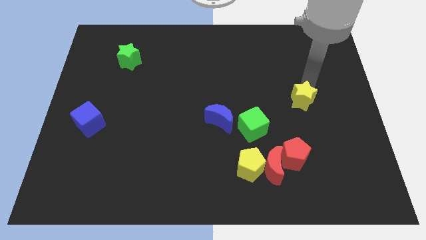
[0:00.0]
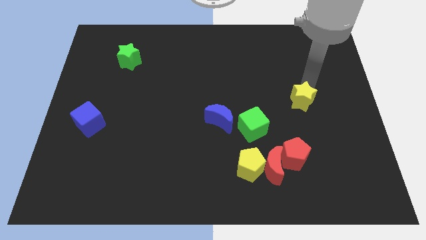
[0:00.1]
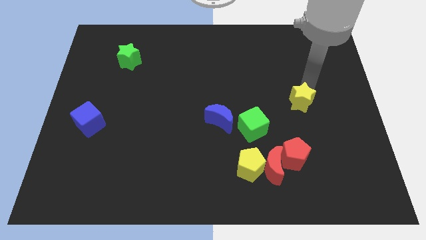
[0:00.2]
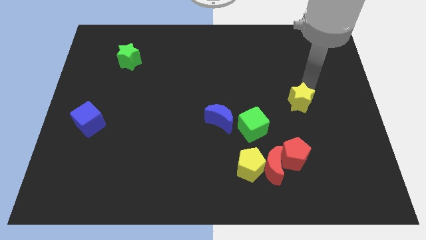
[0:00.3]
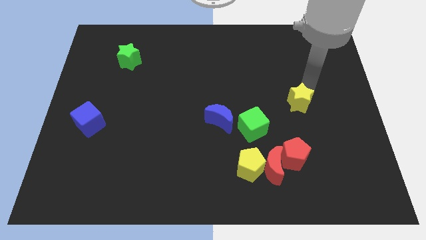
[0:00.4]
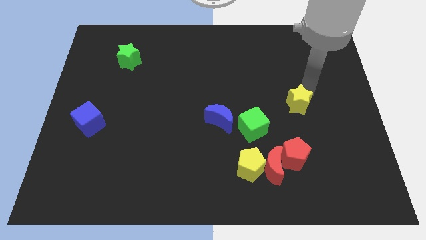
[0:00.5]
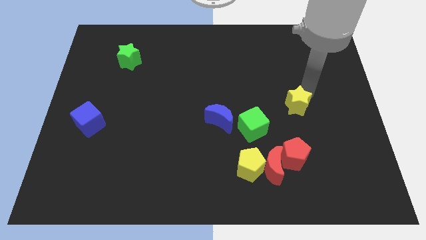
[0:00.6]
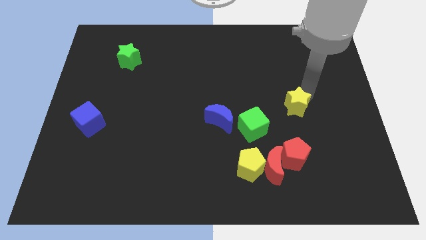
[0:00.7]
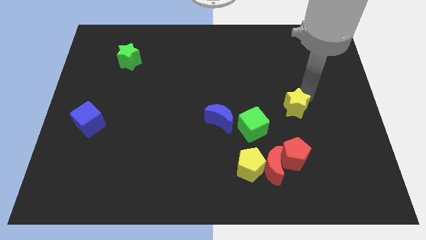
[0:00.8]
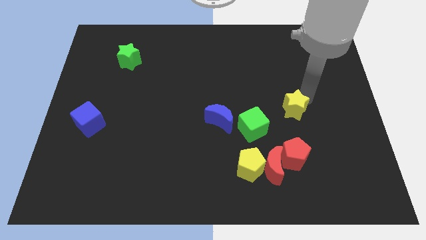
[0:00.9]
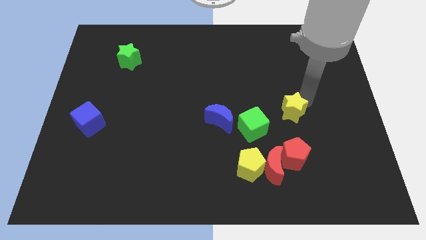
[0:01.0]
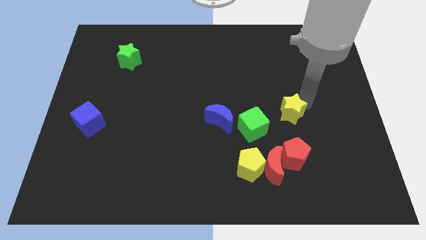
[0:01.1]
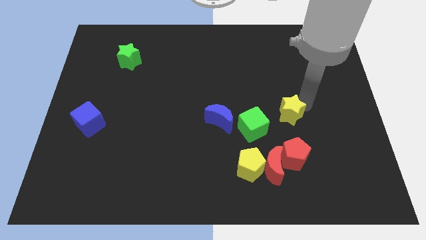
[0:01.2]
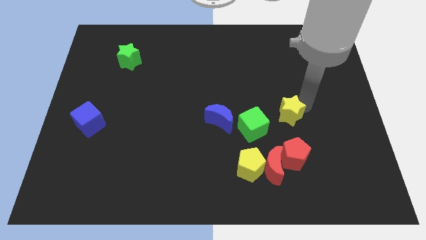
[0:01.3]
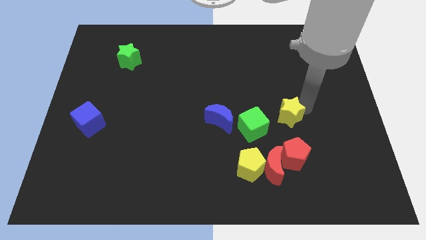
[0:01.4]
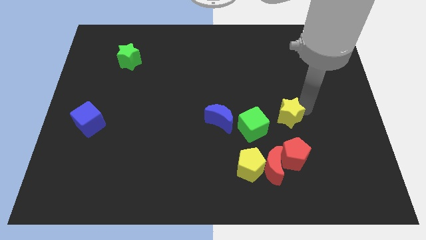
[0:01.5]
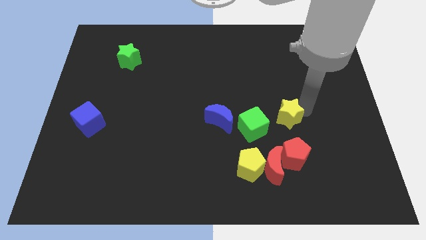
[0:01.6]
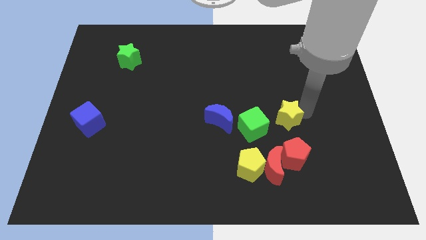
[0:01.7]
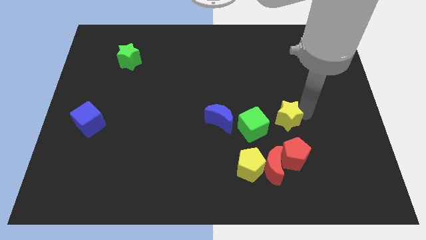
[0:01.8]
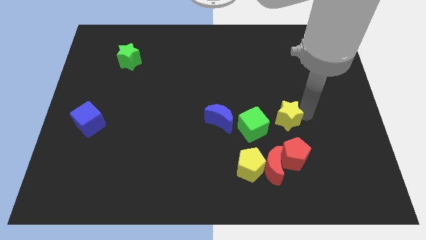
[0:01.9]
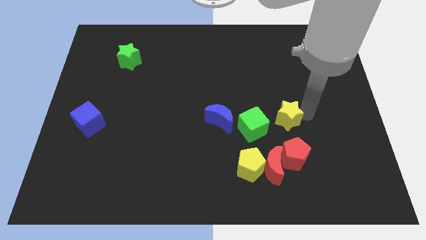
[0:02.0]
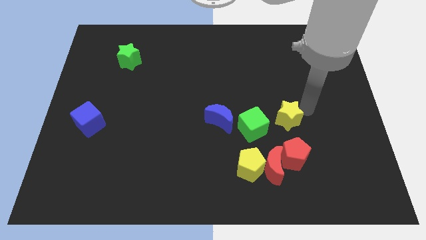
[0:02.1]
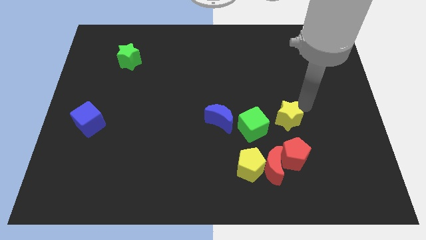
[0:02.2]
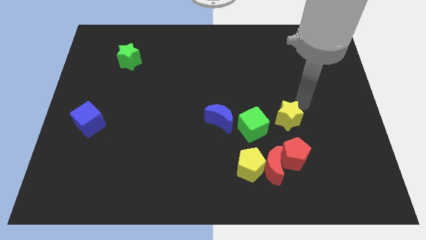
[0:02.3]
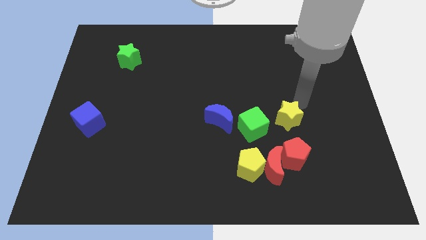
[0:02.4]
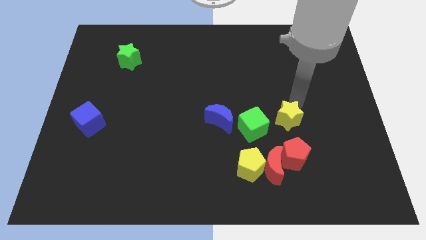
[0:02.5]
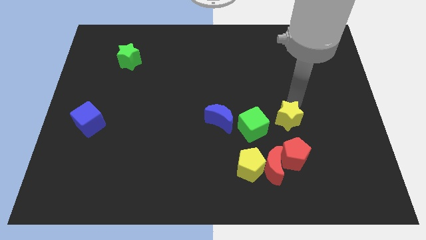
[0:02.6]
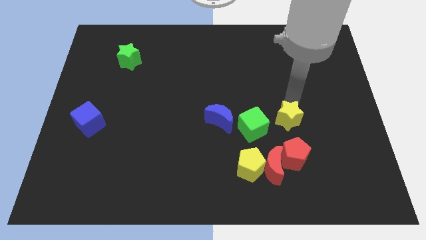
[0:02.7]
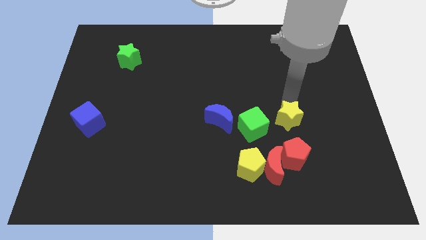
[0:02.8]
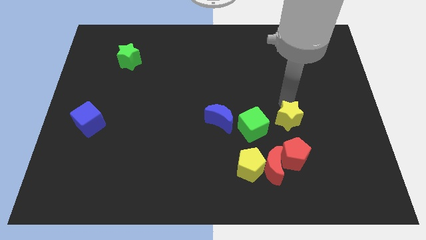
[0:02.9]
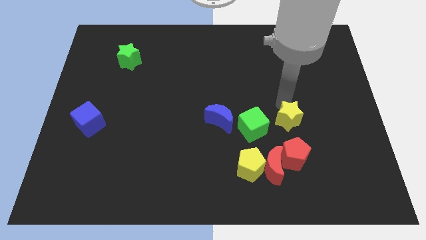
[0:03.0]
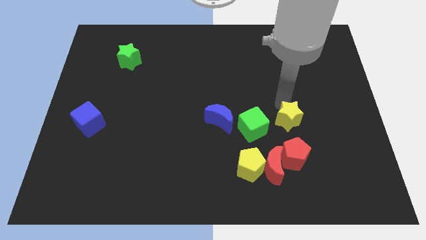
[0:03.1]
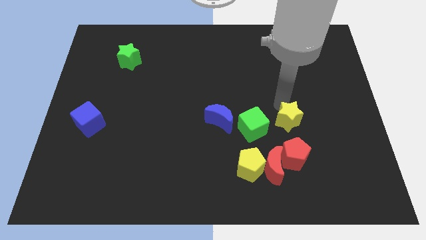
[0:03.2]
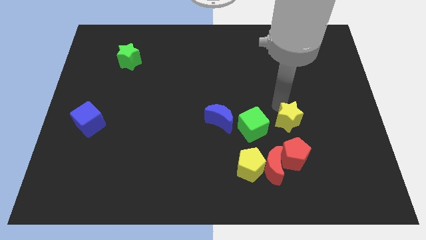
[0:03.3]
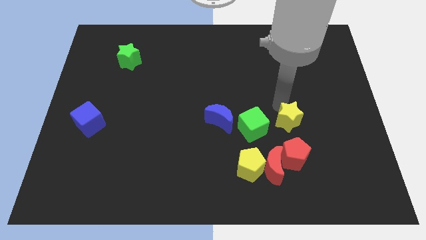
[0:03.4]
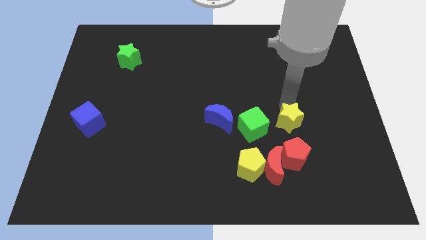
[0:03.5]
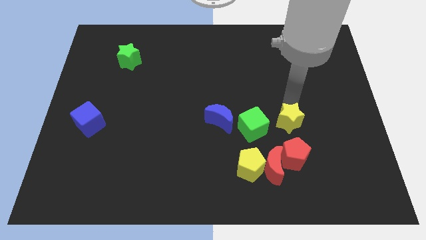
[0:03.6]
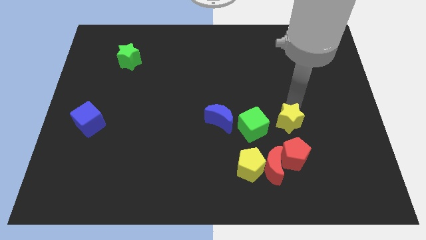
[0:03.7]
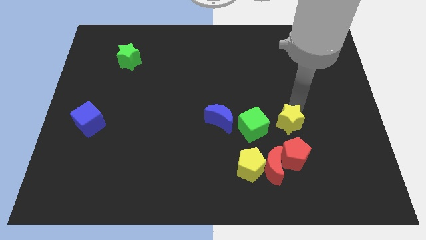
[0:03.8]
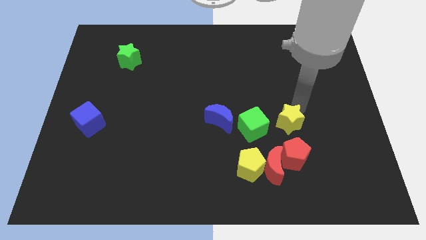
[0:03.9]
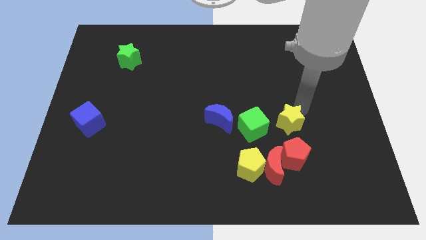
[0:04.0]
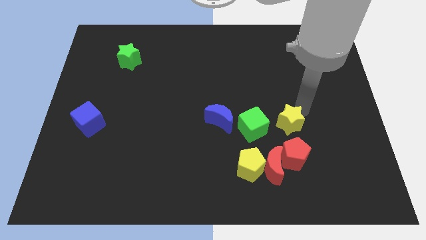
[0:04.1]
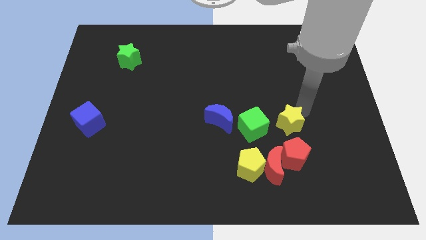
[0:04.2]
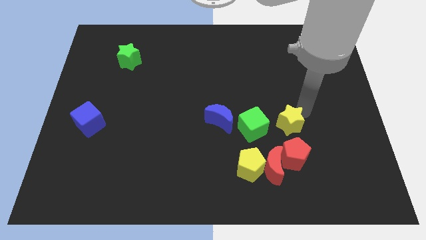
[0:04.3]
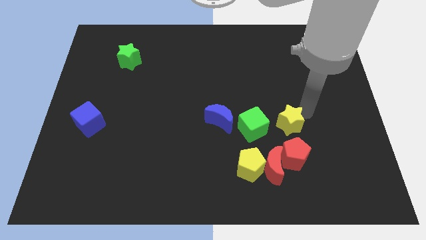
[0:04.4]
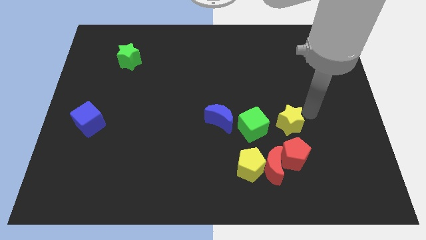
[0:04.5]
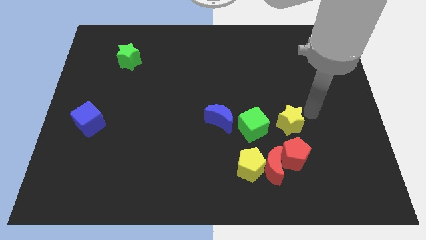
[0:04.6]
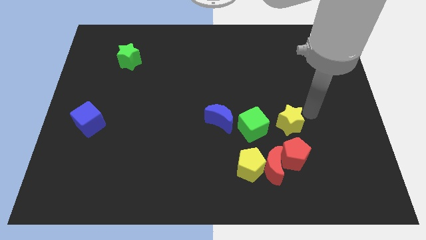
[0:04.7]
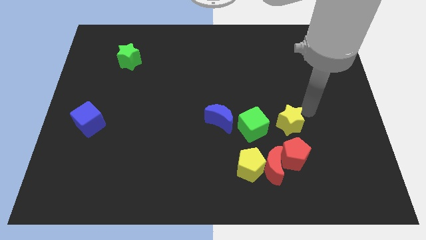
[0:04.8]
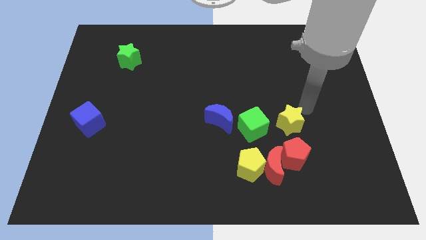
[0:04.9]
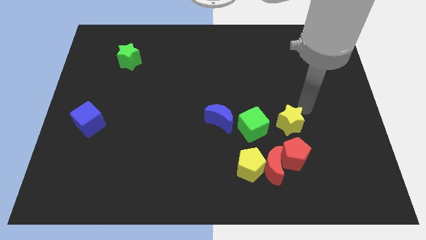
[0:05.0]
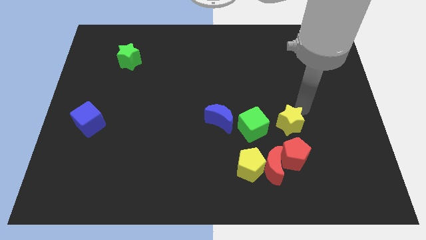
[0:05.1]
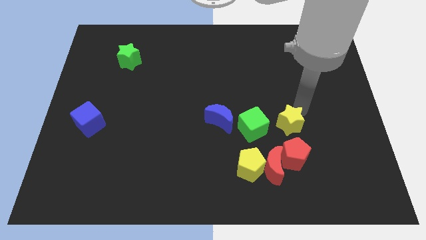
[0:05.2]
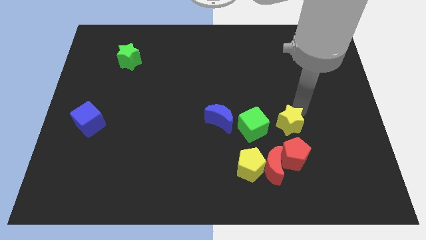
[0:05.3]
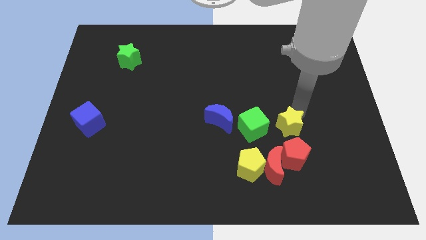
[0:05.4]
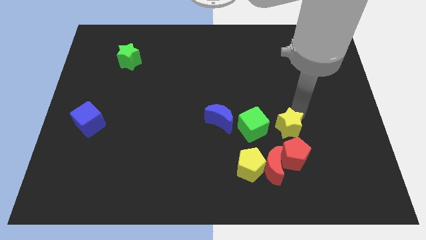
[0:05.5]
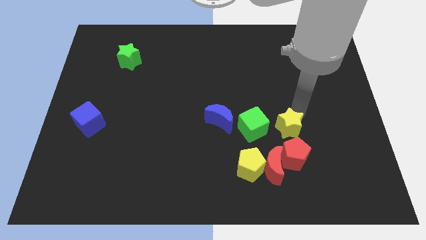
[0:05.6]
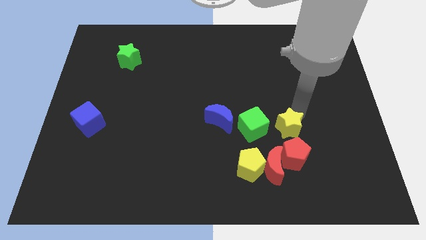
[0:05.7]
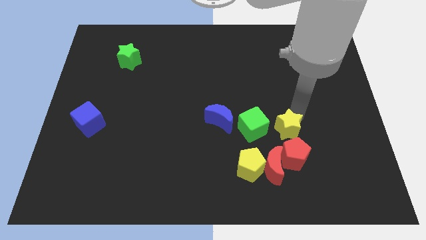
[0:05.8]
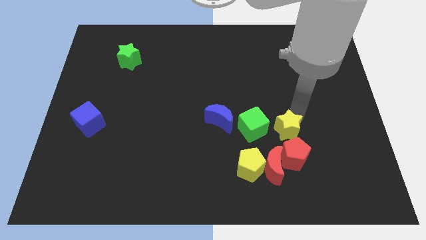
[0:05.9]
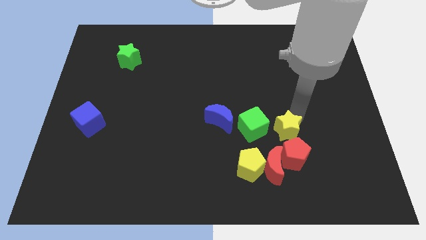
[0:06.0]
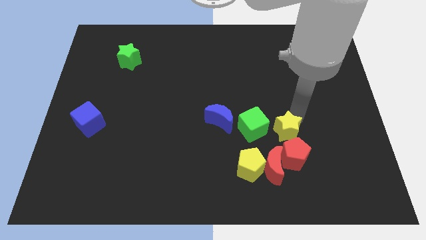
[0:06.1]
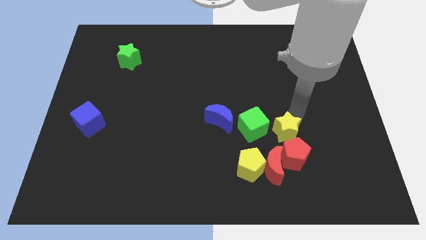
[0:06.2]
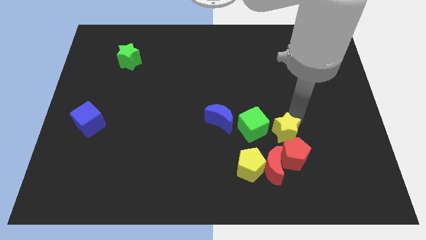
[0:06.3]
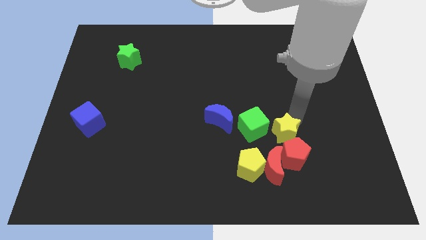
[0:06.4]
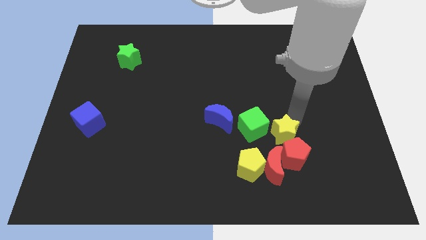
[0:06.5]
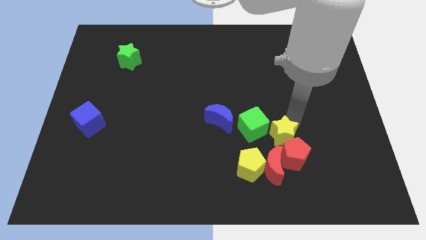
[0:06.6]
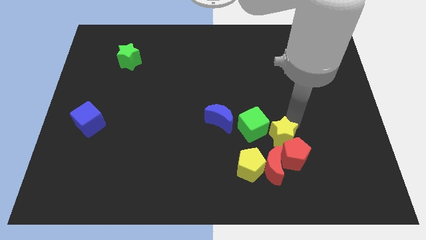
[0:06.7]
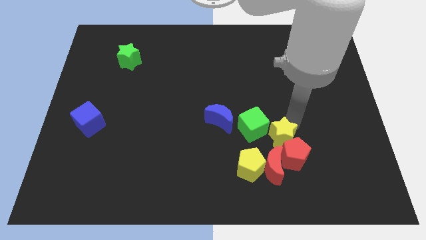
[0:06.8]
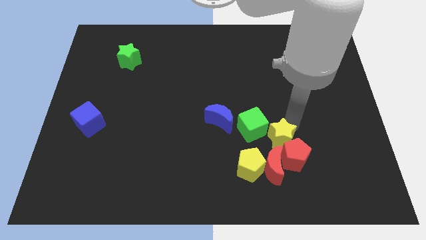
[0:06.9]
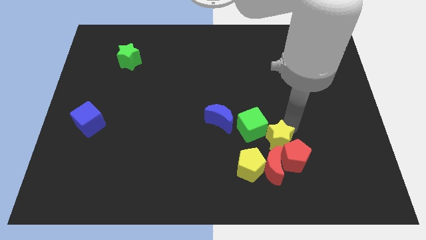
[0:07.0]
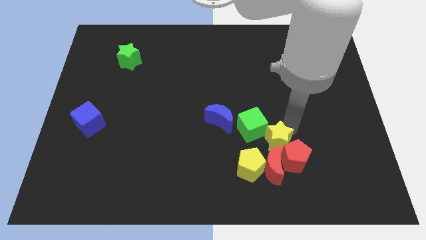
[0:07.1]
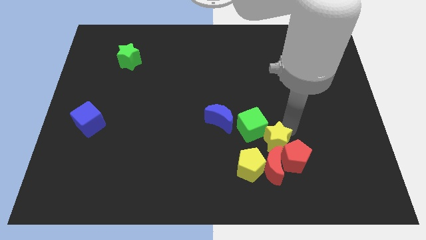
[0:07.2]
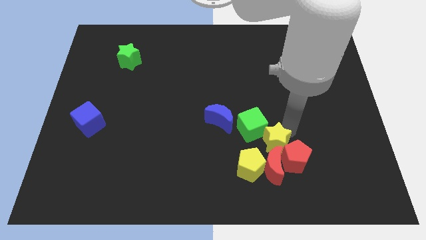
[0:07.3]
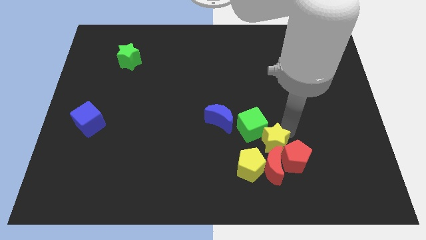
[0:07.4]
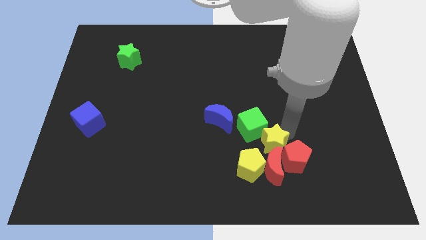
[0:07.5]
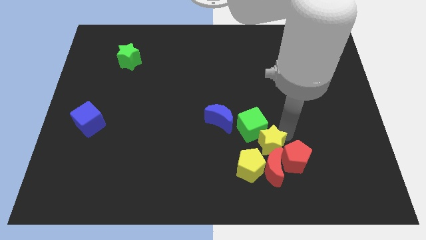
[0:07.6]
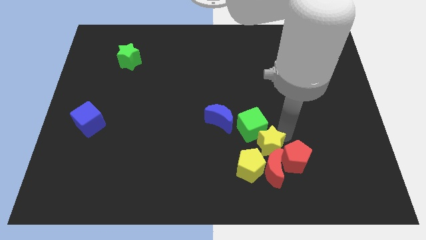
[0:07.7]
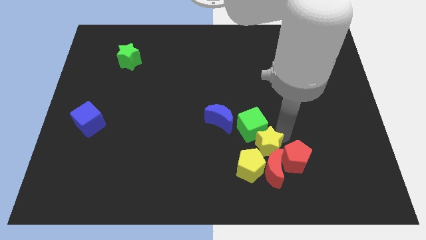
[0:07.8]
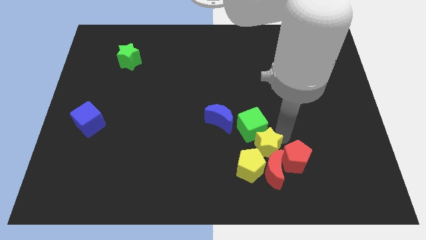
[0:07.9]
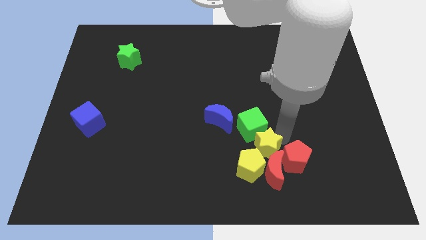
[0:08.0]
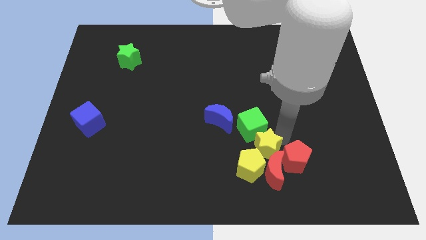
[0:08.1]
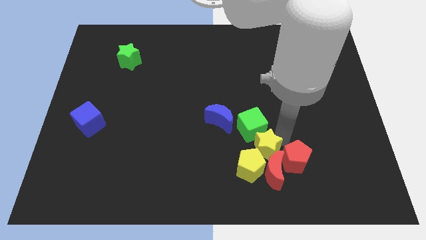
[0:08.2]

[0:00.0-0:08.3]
place the yellow star above the yellow pentagon and the red moon to form a triangle

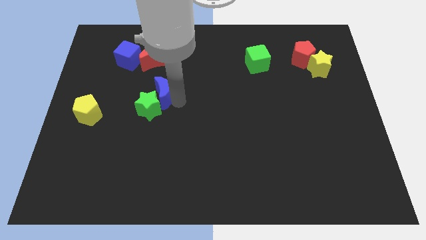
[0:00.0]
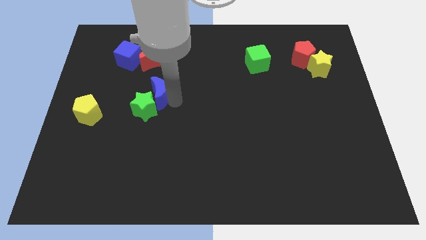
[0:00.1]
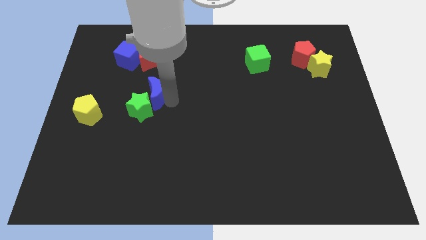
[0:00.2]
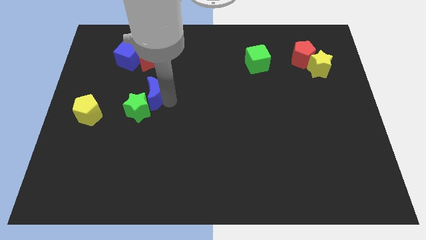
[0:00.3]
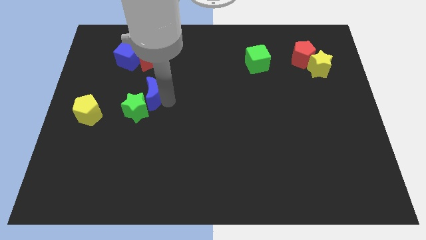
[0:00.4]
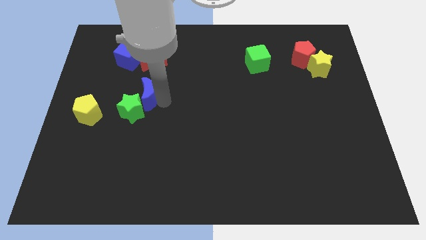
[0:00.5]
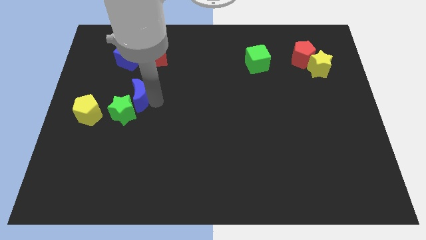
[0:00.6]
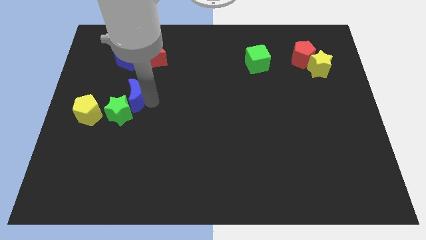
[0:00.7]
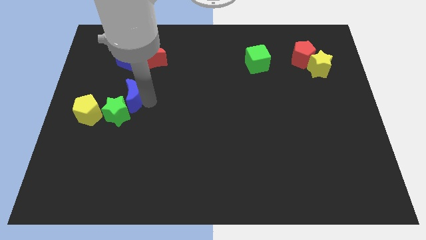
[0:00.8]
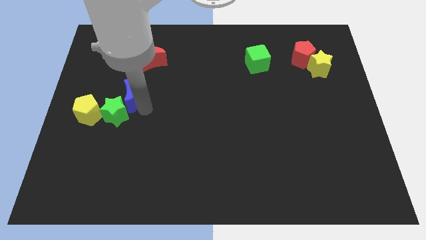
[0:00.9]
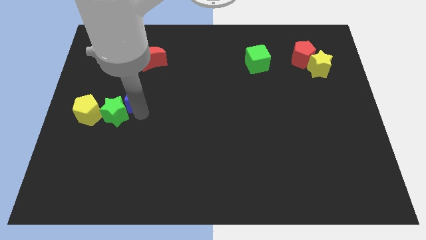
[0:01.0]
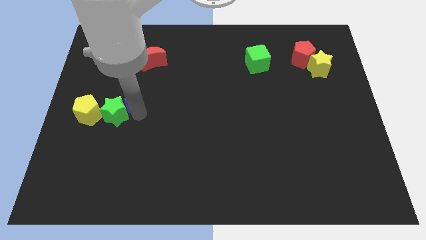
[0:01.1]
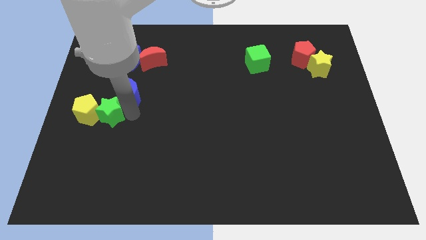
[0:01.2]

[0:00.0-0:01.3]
slide the green star along with the blue moon towards the center left
